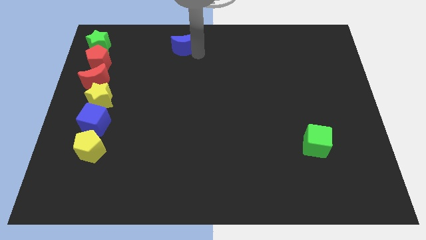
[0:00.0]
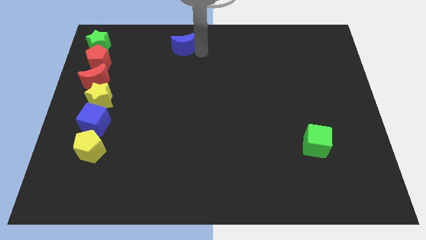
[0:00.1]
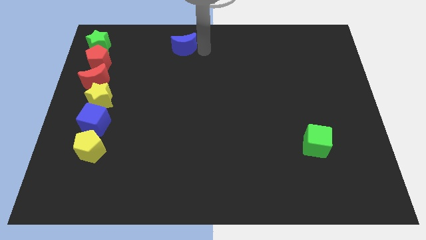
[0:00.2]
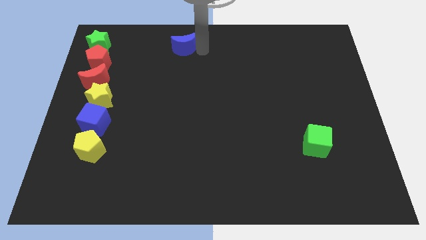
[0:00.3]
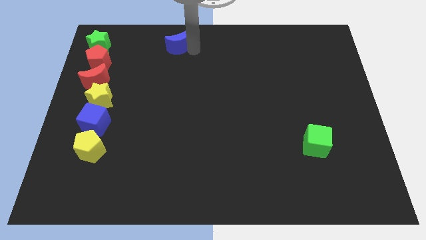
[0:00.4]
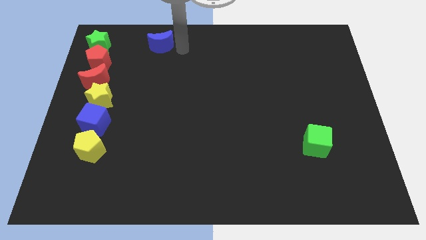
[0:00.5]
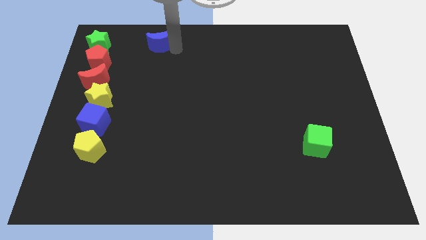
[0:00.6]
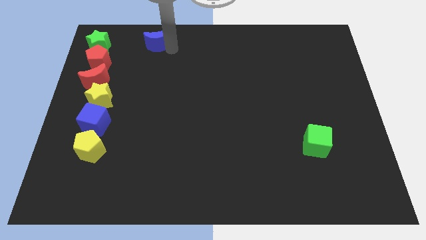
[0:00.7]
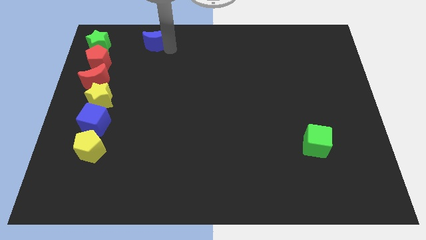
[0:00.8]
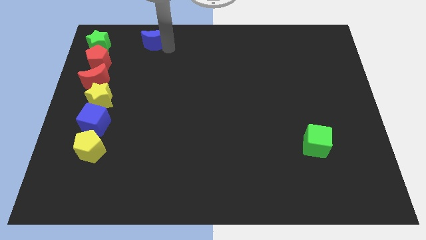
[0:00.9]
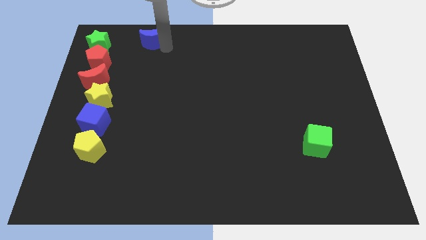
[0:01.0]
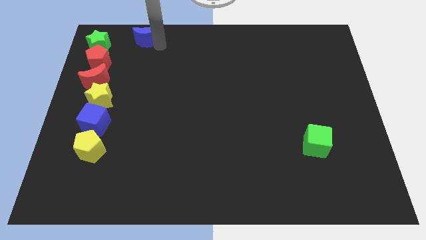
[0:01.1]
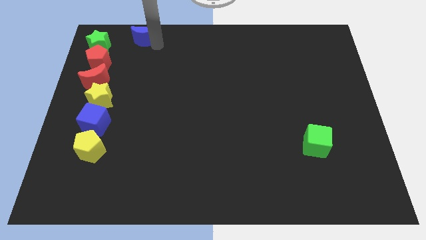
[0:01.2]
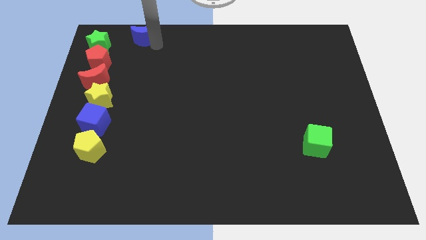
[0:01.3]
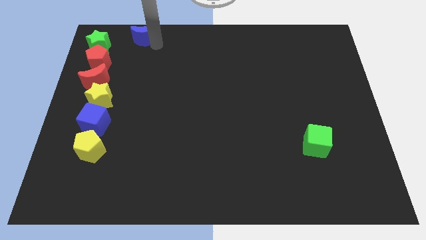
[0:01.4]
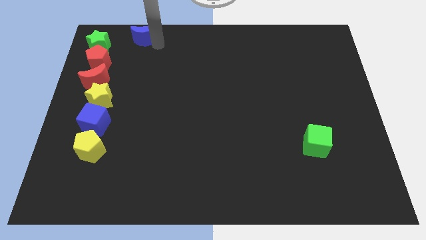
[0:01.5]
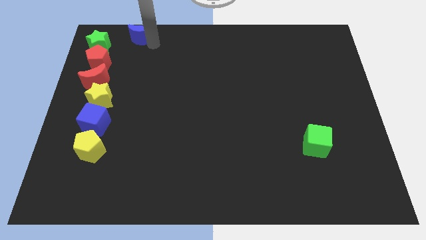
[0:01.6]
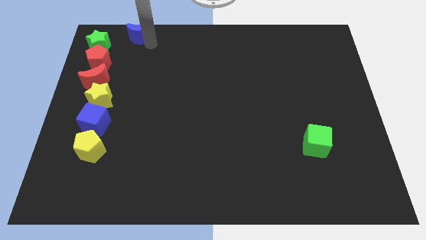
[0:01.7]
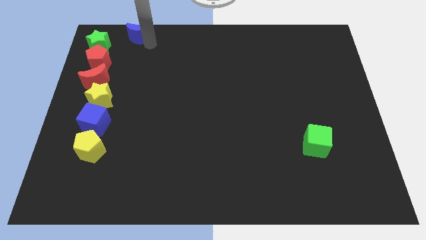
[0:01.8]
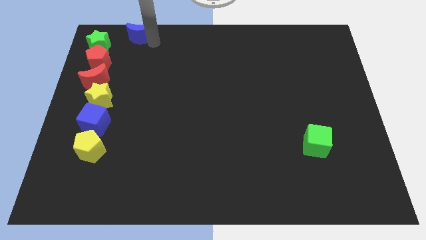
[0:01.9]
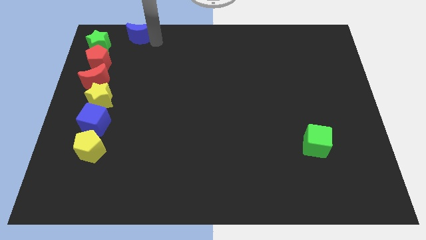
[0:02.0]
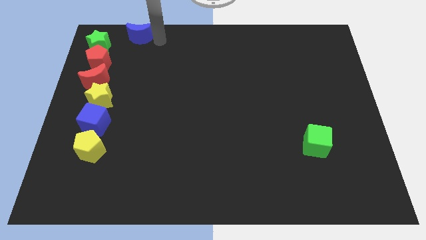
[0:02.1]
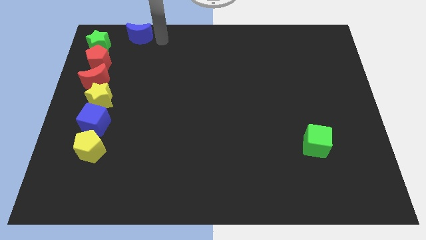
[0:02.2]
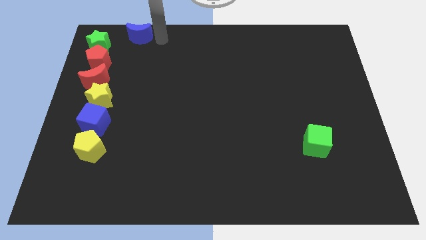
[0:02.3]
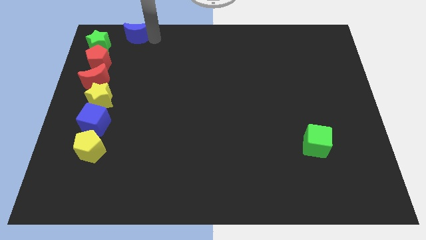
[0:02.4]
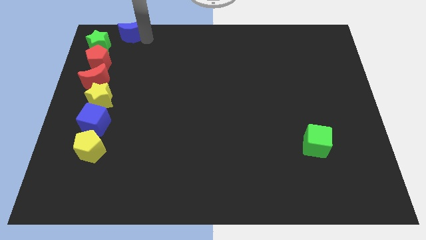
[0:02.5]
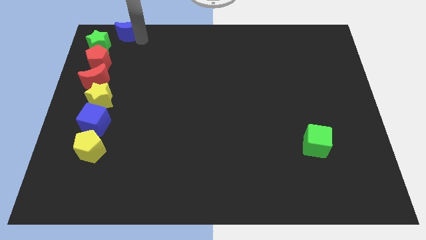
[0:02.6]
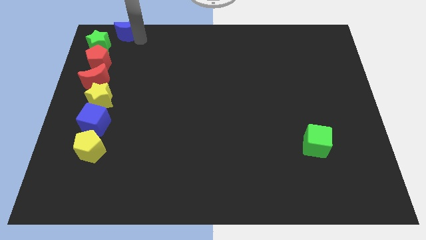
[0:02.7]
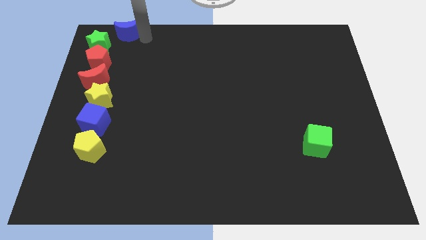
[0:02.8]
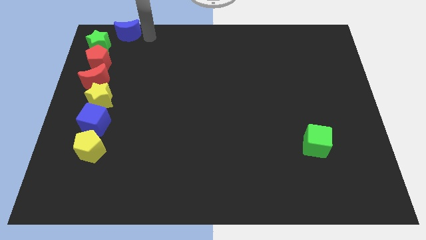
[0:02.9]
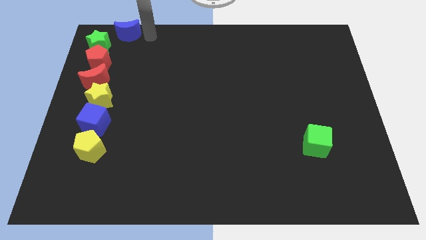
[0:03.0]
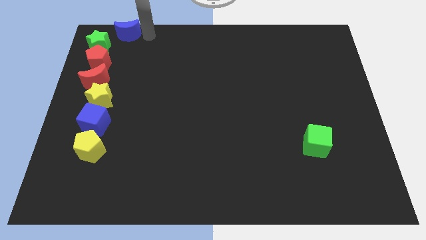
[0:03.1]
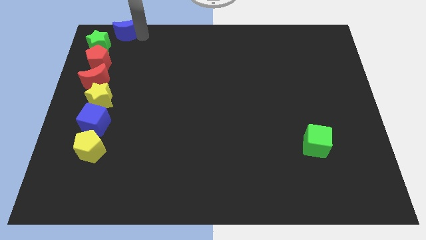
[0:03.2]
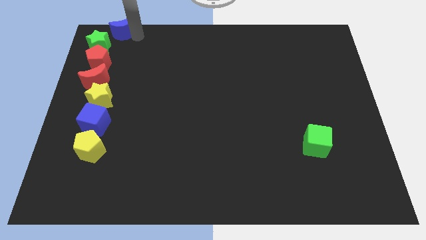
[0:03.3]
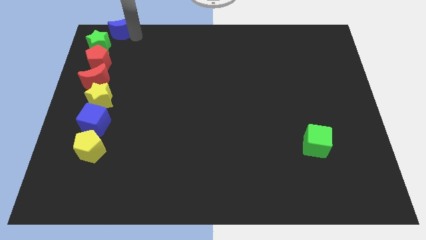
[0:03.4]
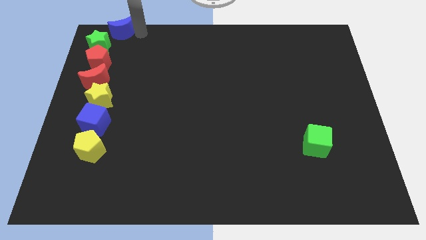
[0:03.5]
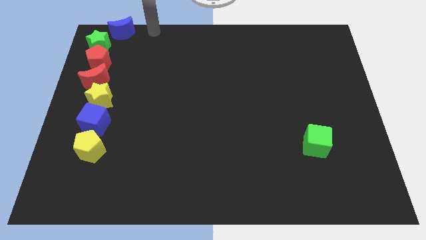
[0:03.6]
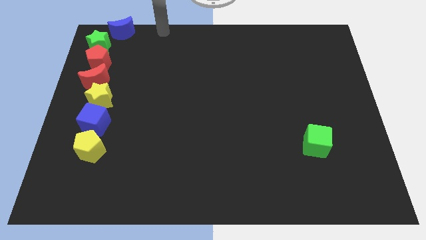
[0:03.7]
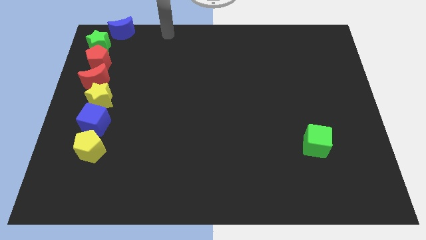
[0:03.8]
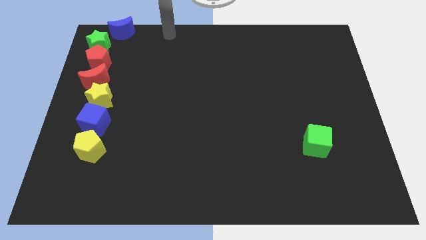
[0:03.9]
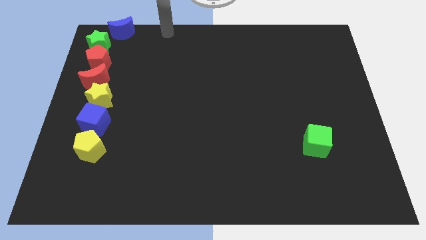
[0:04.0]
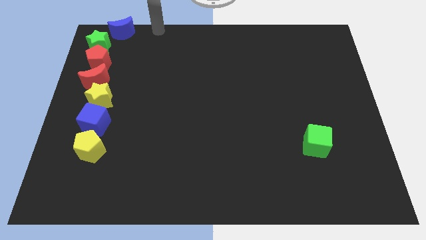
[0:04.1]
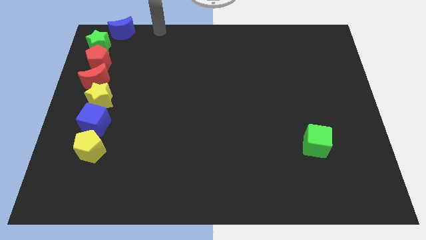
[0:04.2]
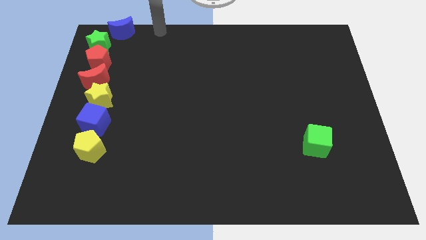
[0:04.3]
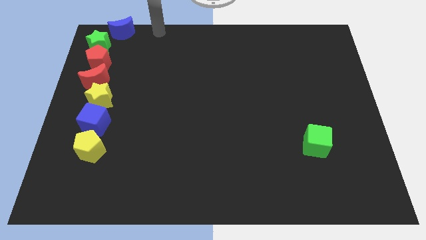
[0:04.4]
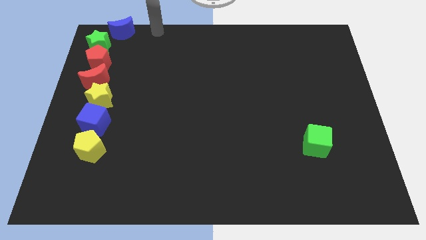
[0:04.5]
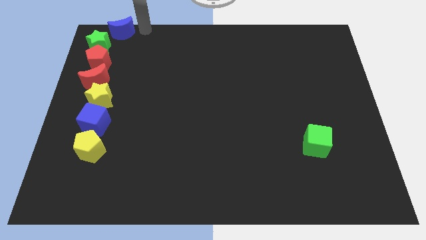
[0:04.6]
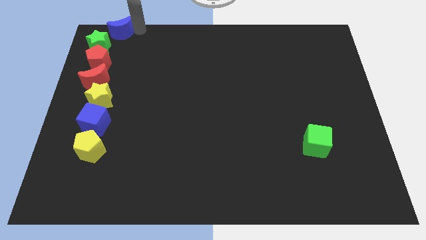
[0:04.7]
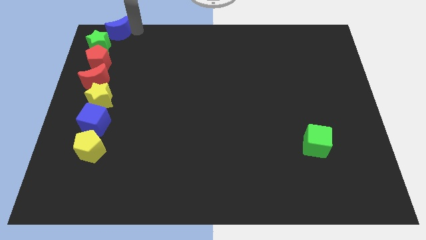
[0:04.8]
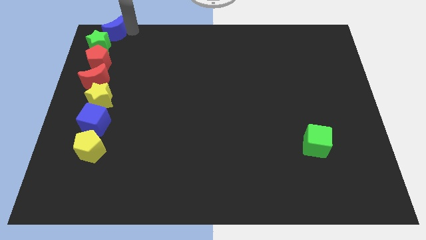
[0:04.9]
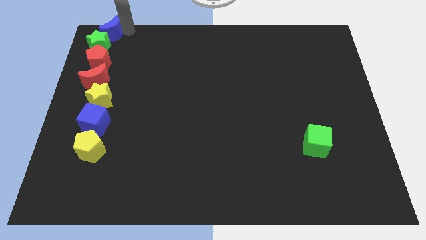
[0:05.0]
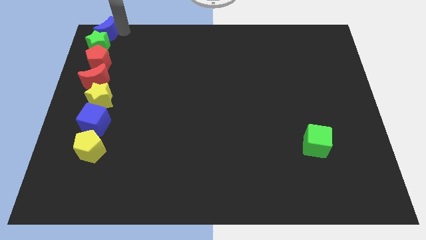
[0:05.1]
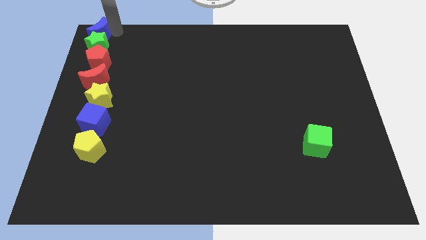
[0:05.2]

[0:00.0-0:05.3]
move the blue moon above the green star

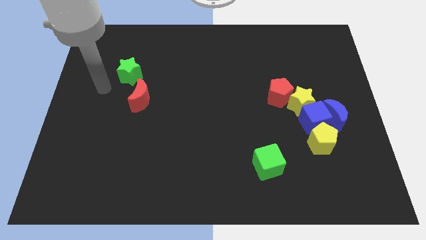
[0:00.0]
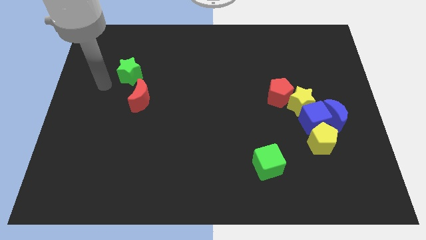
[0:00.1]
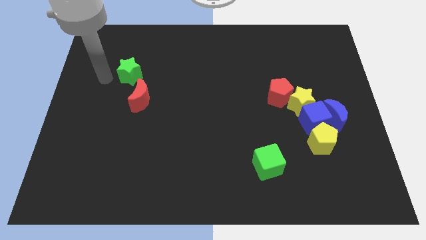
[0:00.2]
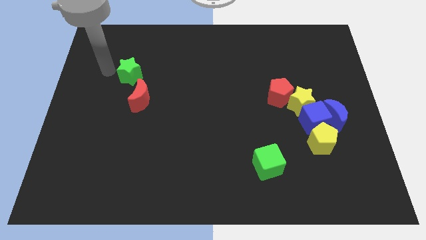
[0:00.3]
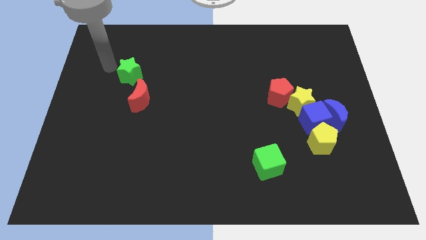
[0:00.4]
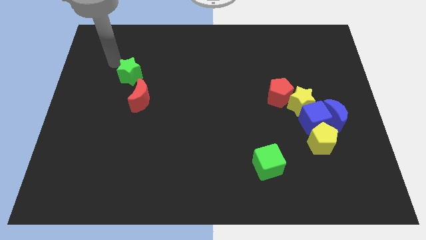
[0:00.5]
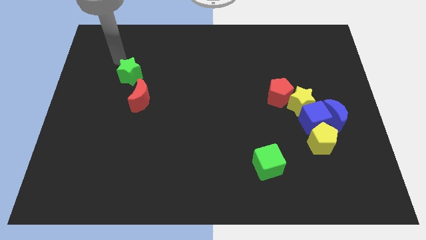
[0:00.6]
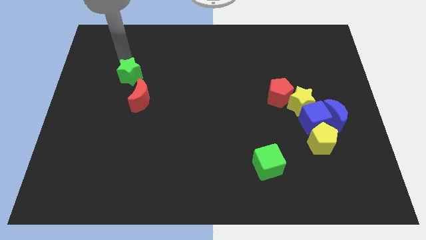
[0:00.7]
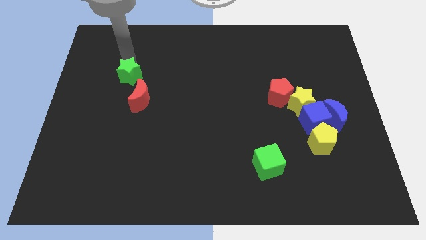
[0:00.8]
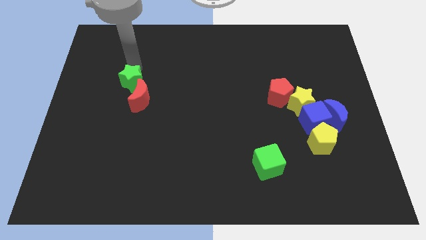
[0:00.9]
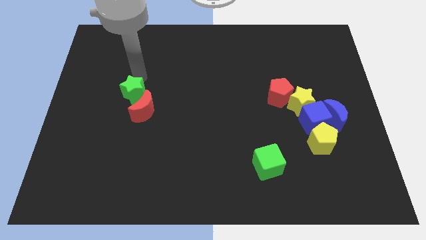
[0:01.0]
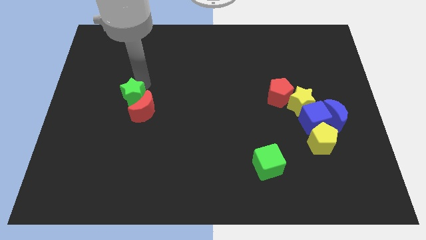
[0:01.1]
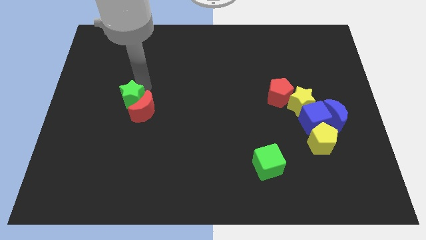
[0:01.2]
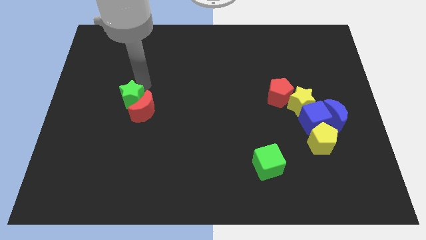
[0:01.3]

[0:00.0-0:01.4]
push the green star to the left of the red crescent

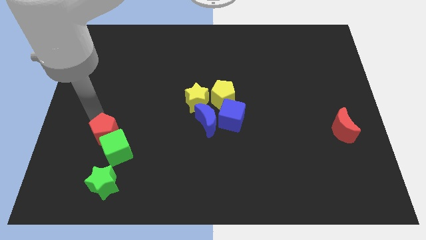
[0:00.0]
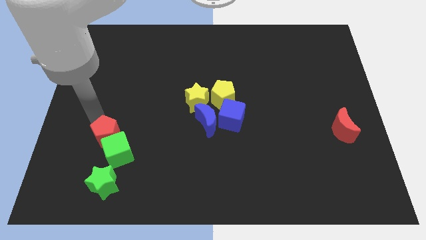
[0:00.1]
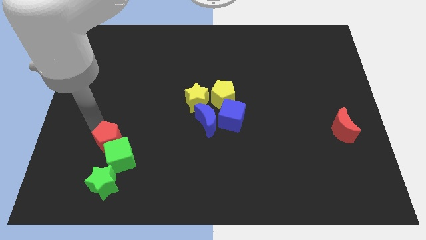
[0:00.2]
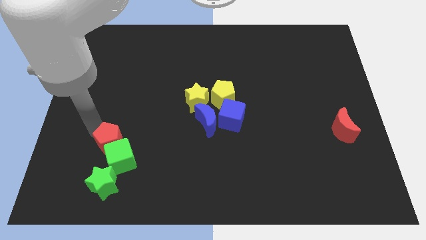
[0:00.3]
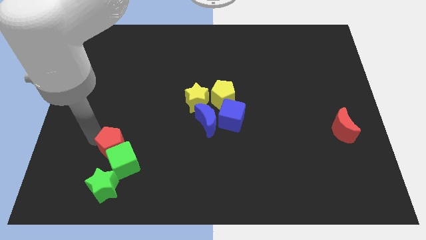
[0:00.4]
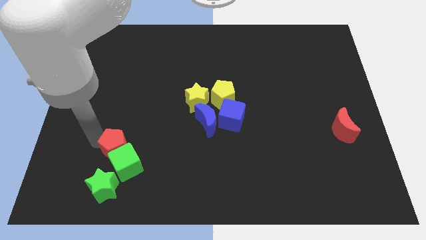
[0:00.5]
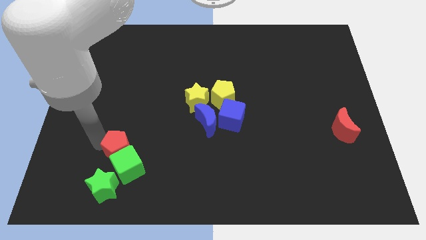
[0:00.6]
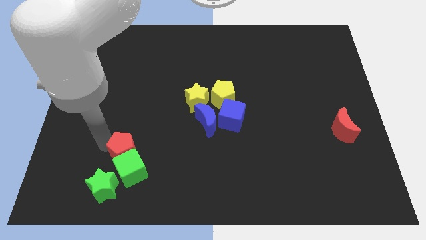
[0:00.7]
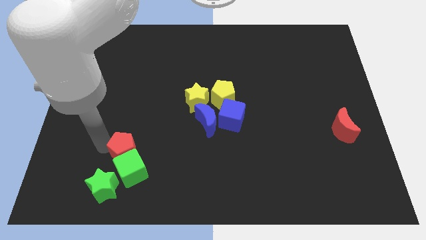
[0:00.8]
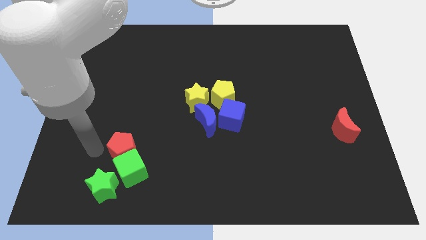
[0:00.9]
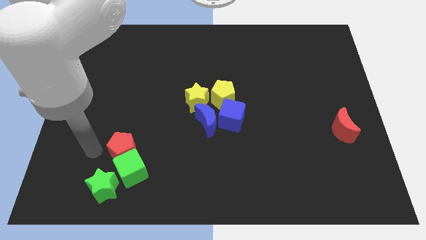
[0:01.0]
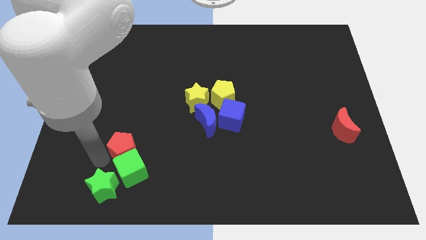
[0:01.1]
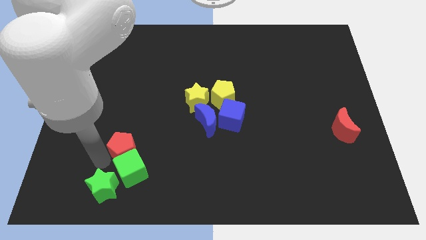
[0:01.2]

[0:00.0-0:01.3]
push the green blocks and red pentagon towards the bottom side of the board

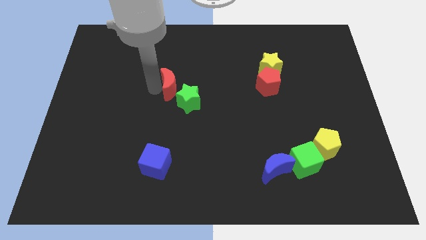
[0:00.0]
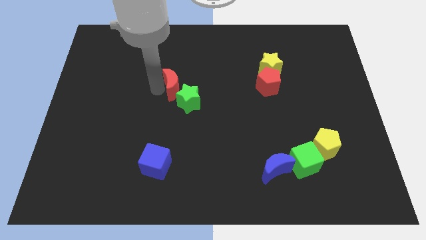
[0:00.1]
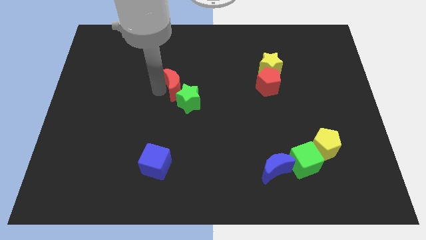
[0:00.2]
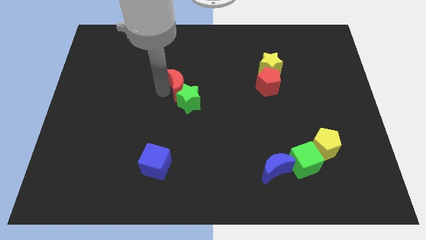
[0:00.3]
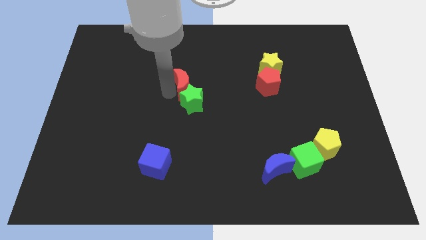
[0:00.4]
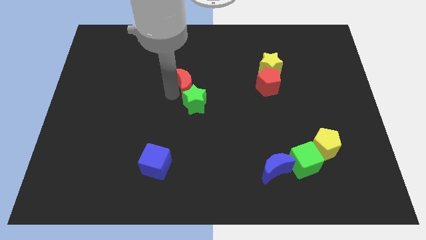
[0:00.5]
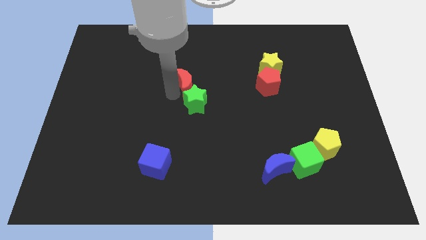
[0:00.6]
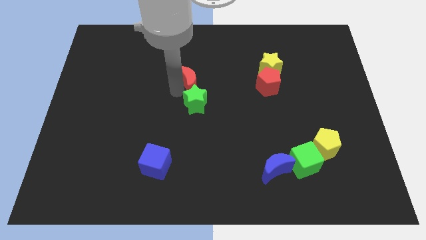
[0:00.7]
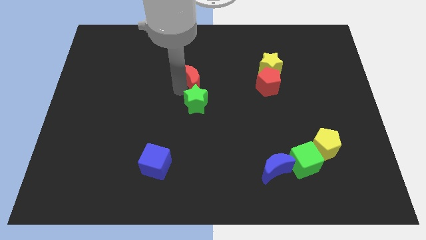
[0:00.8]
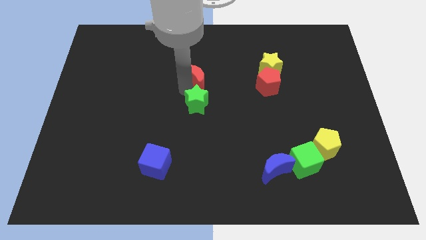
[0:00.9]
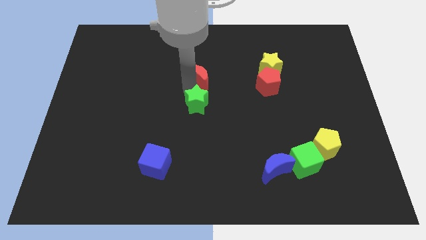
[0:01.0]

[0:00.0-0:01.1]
place the red crescent above the green star
